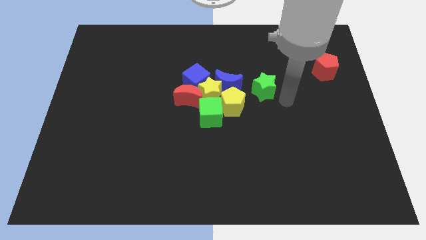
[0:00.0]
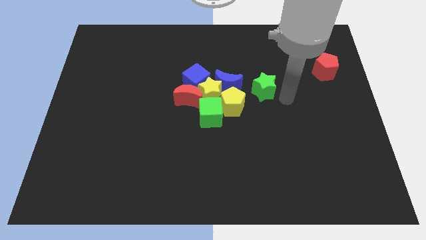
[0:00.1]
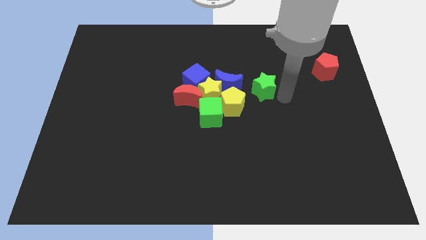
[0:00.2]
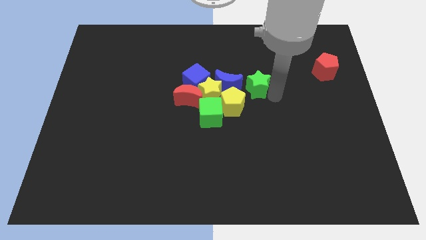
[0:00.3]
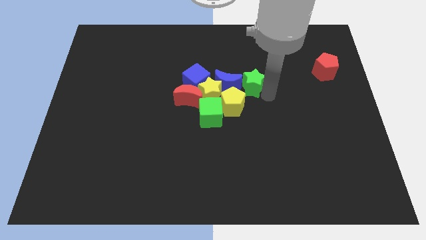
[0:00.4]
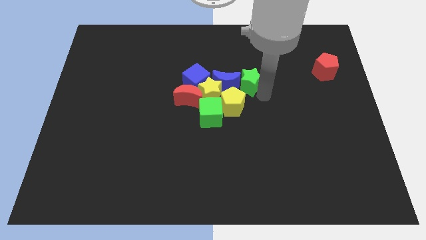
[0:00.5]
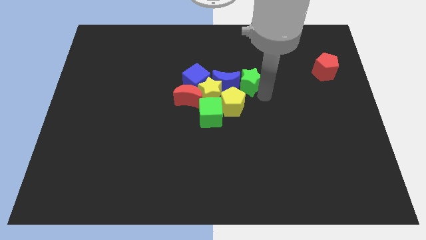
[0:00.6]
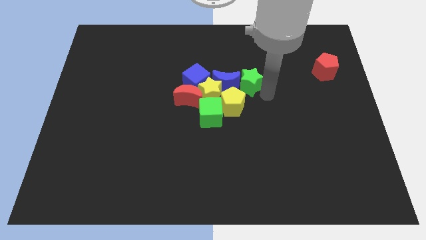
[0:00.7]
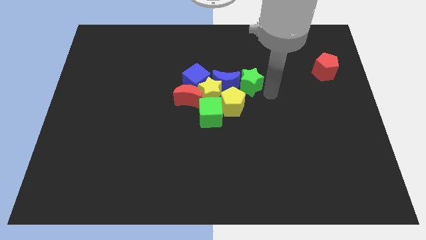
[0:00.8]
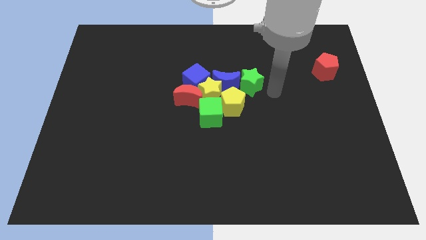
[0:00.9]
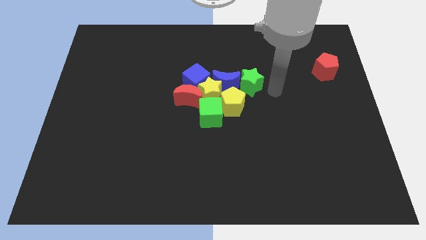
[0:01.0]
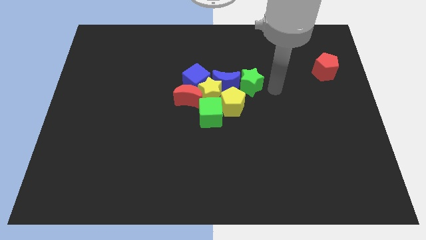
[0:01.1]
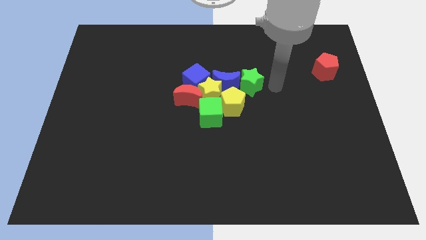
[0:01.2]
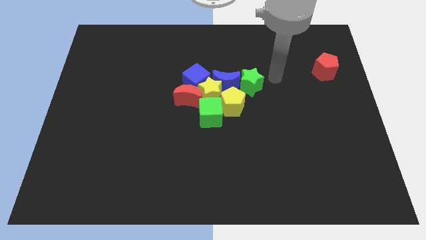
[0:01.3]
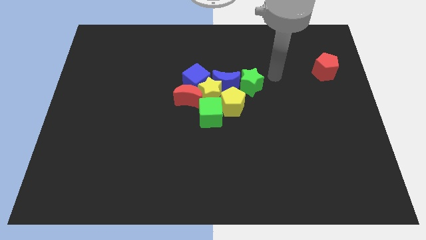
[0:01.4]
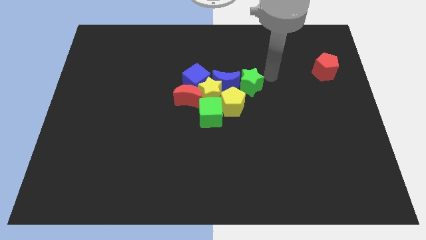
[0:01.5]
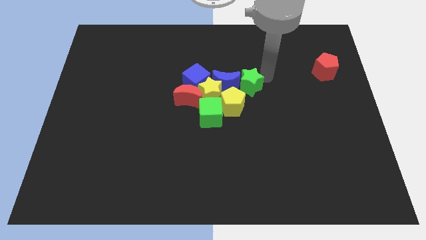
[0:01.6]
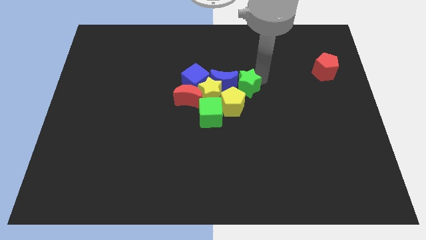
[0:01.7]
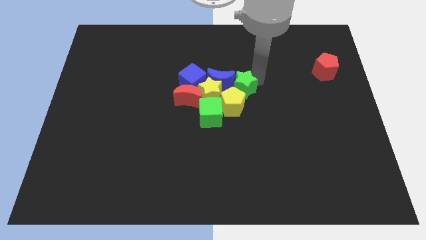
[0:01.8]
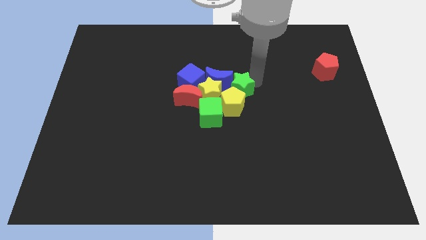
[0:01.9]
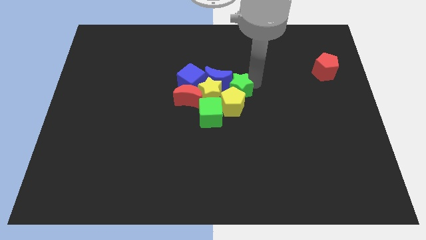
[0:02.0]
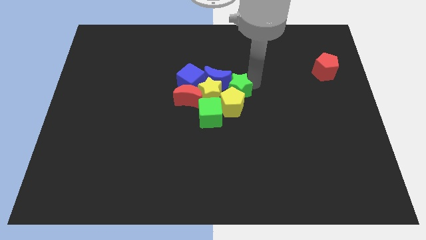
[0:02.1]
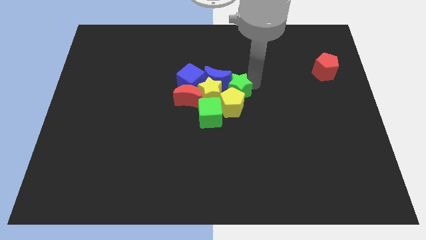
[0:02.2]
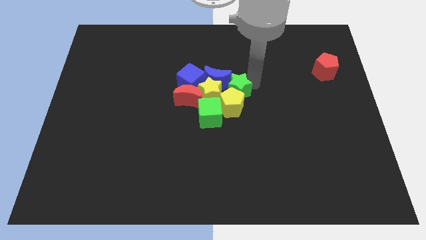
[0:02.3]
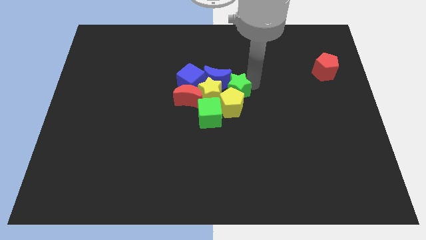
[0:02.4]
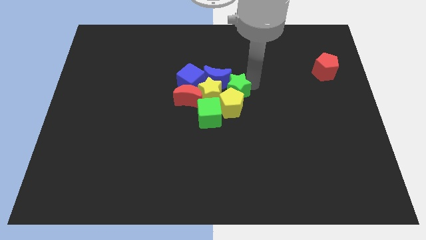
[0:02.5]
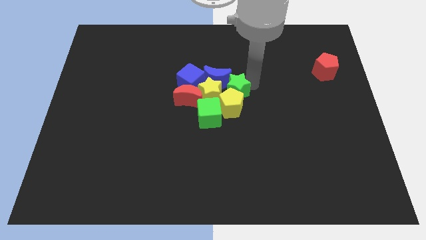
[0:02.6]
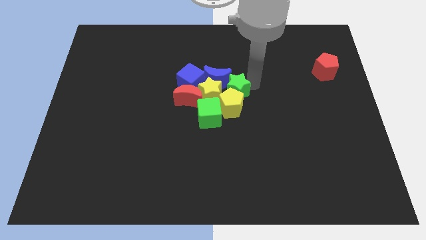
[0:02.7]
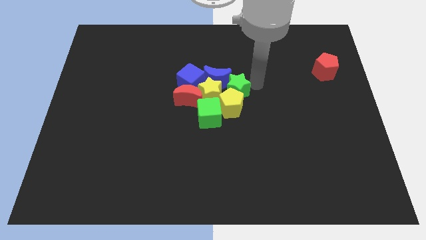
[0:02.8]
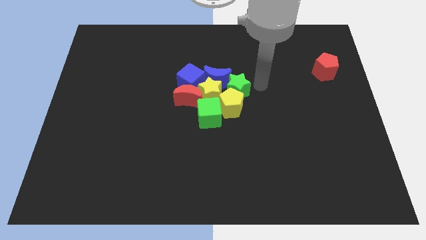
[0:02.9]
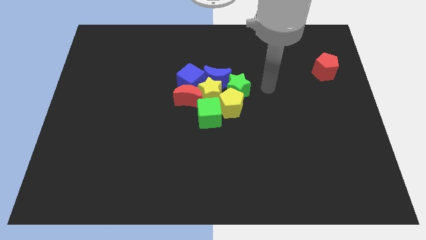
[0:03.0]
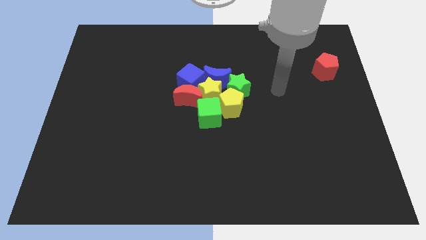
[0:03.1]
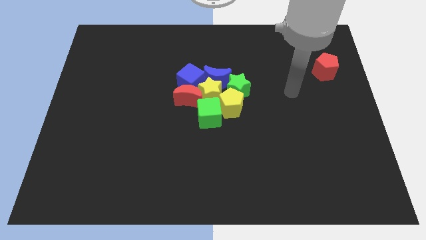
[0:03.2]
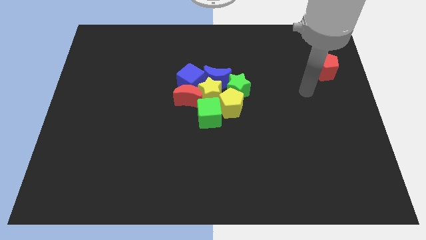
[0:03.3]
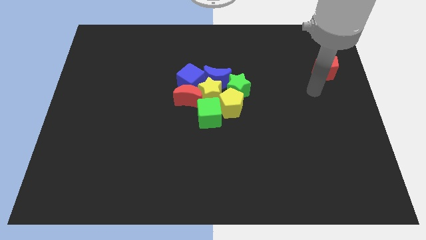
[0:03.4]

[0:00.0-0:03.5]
move the green star to the group of blocks at the center of the board

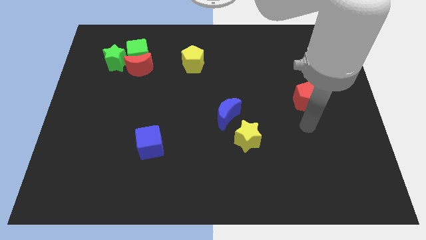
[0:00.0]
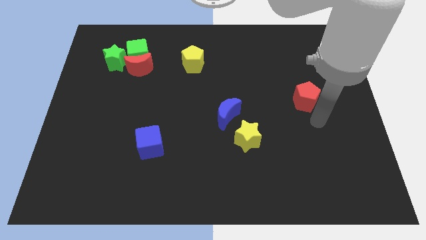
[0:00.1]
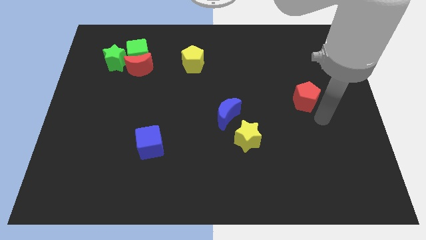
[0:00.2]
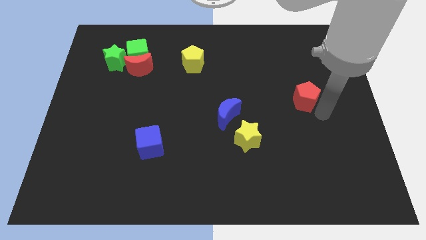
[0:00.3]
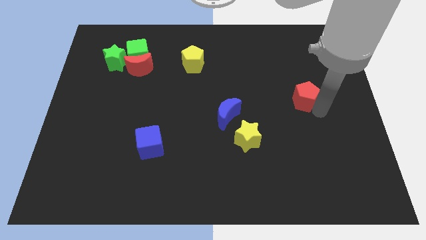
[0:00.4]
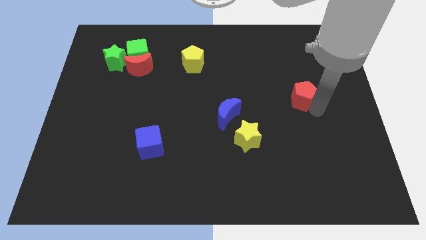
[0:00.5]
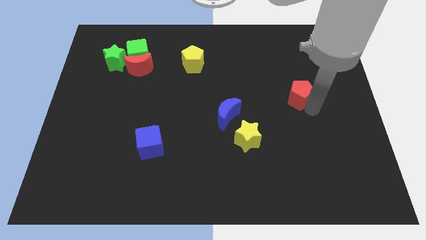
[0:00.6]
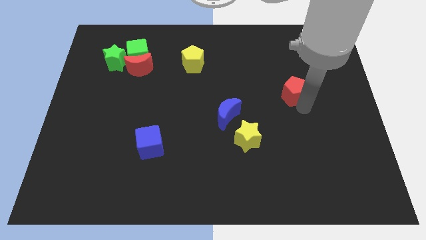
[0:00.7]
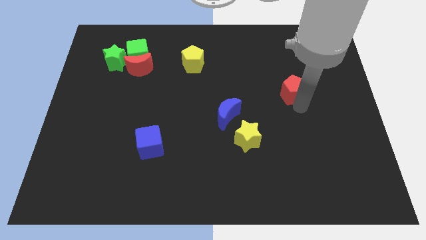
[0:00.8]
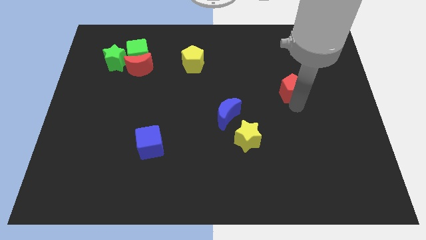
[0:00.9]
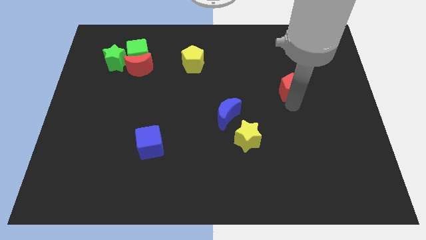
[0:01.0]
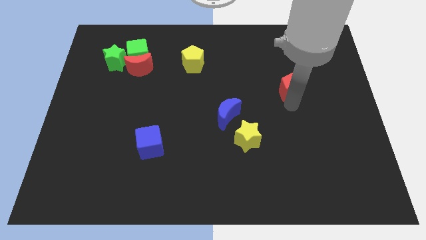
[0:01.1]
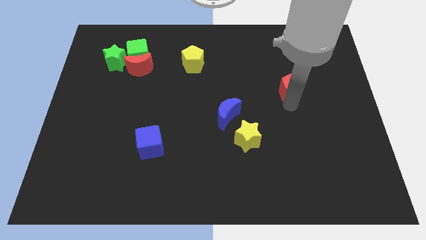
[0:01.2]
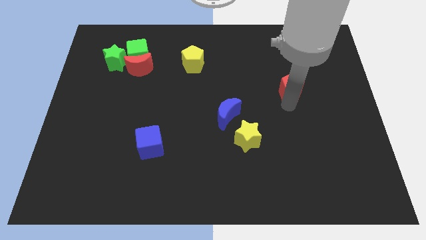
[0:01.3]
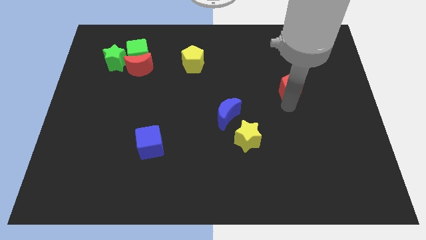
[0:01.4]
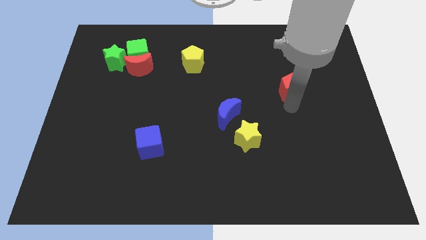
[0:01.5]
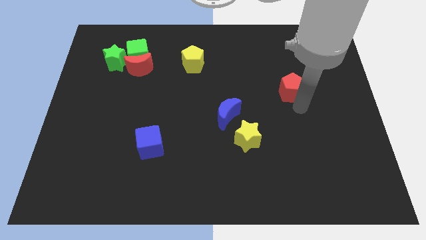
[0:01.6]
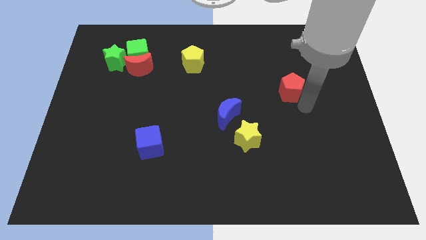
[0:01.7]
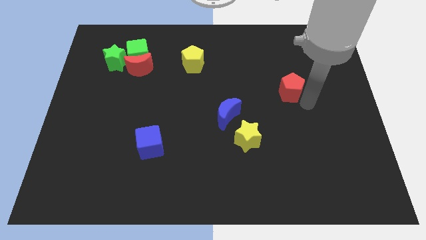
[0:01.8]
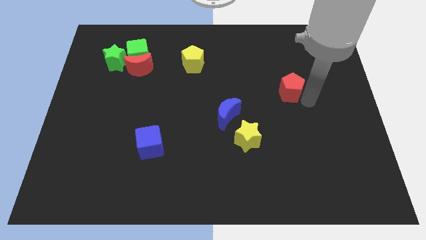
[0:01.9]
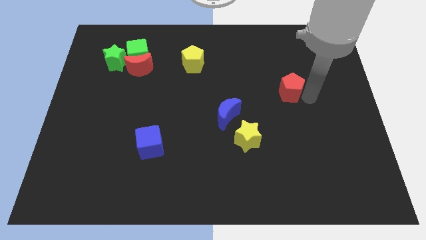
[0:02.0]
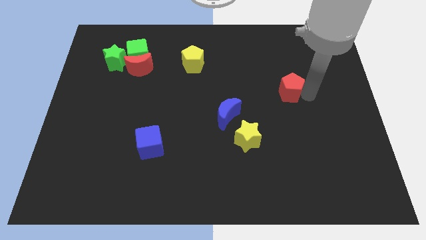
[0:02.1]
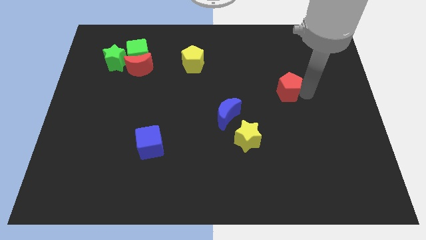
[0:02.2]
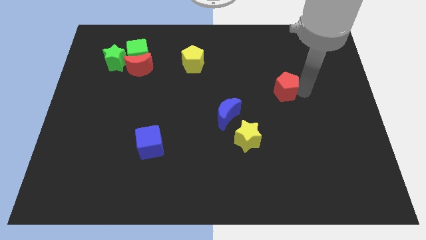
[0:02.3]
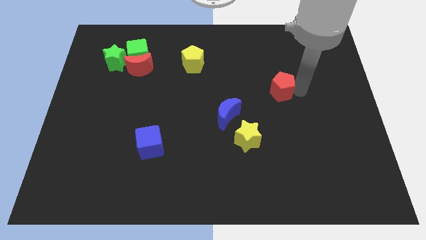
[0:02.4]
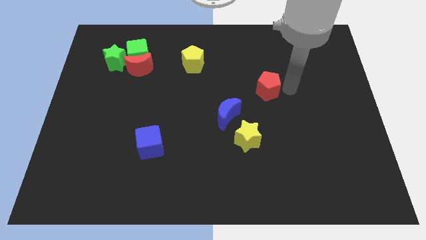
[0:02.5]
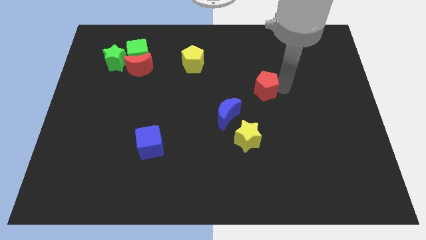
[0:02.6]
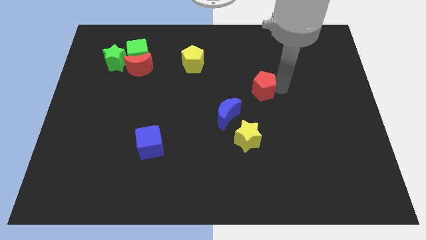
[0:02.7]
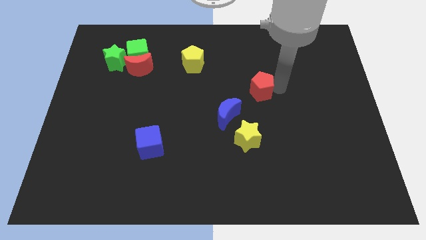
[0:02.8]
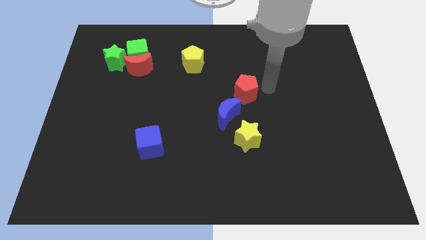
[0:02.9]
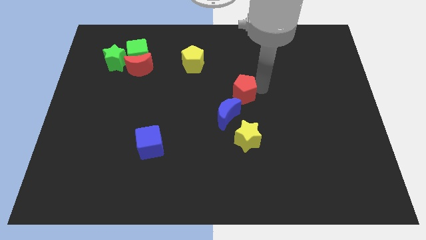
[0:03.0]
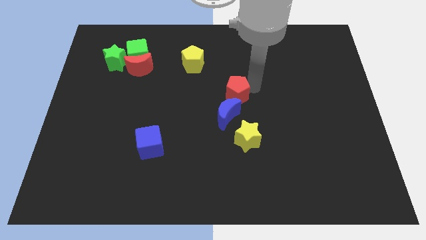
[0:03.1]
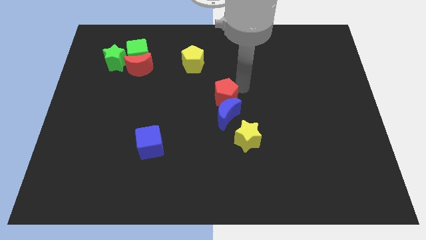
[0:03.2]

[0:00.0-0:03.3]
push the red pentagon to the top of the blue moon

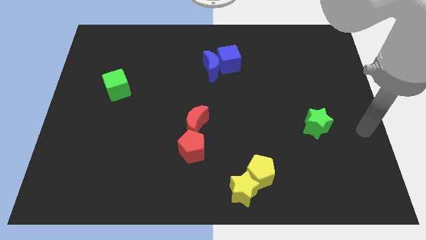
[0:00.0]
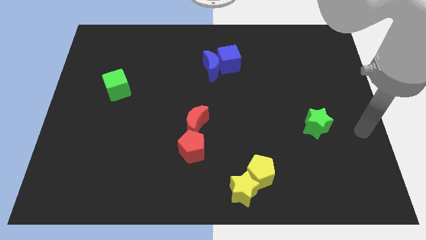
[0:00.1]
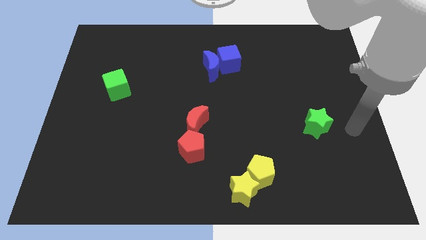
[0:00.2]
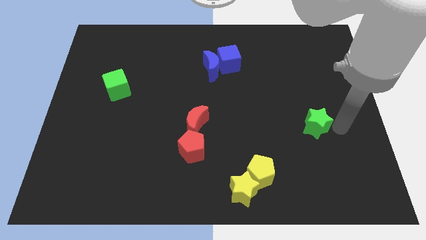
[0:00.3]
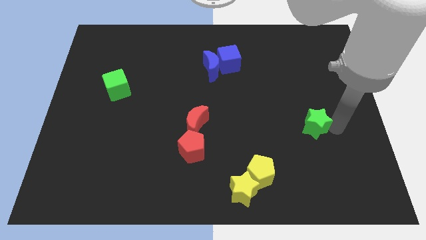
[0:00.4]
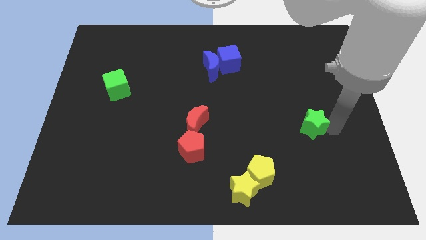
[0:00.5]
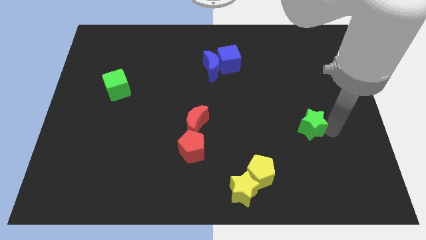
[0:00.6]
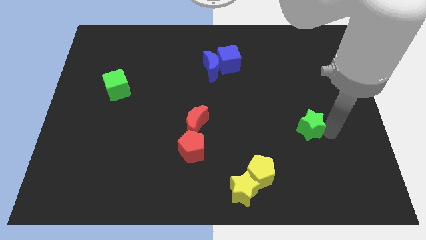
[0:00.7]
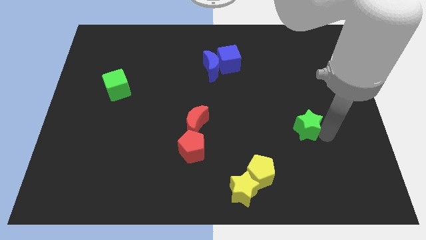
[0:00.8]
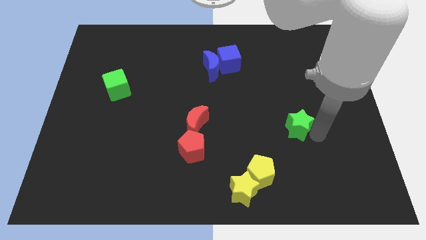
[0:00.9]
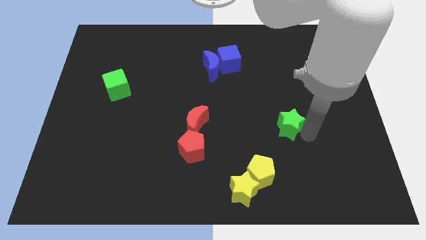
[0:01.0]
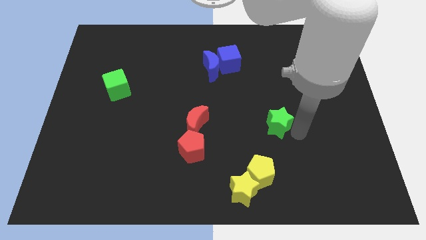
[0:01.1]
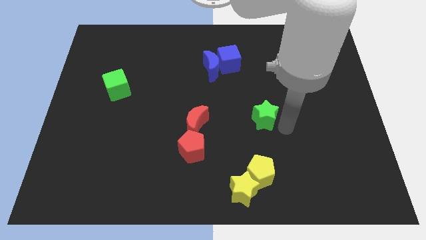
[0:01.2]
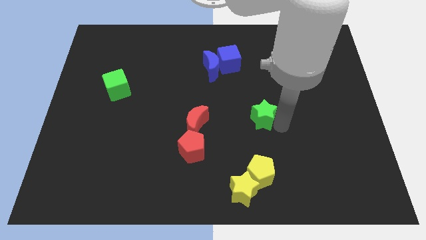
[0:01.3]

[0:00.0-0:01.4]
place the green star vertically above the yellow pentagon

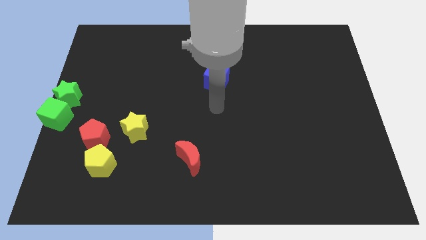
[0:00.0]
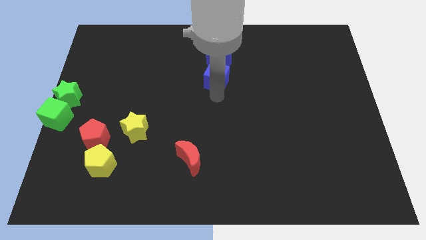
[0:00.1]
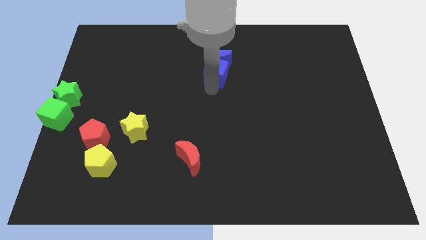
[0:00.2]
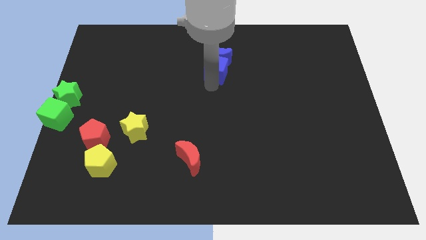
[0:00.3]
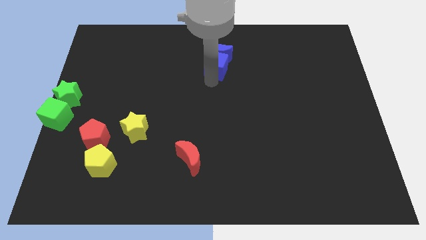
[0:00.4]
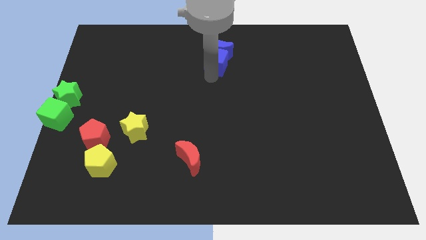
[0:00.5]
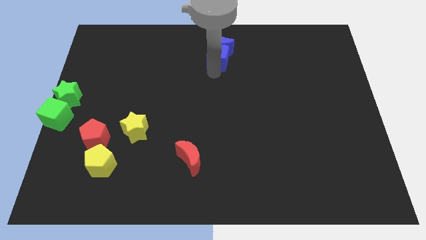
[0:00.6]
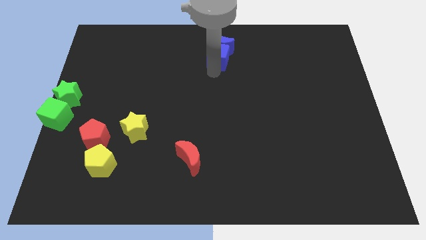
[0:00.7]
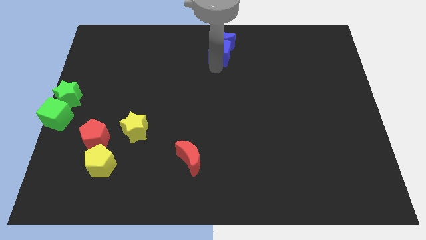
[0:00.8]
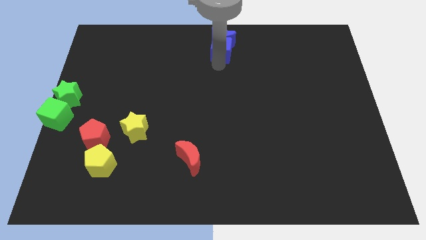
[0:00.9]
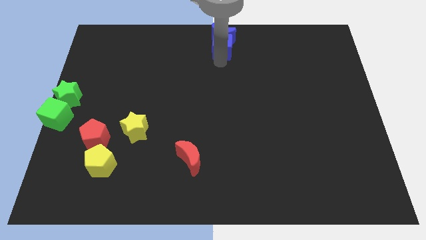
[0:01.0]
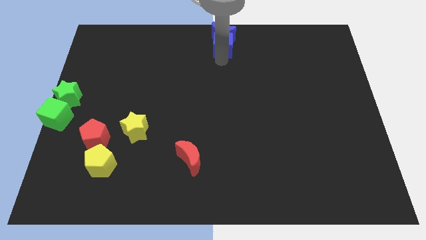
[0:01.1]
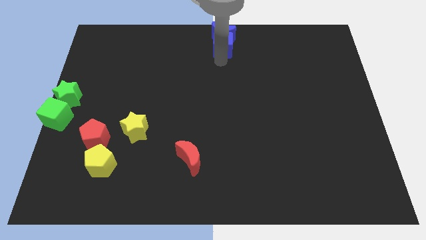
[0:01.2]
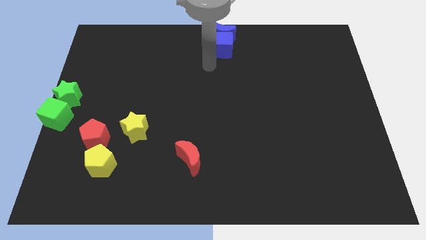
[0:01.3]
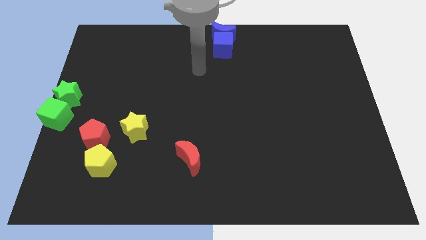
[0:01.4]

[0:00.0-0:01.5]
push the blue moon to the top center with the blue cube
